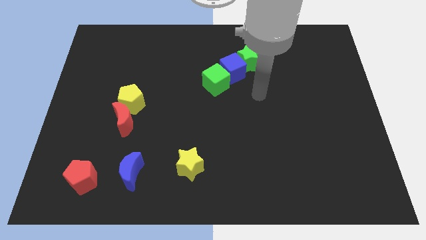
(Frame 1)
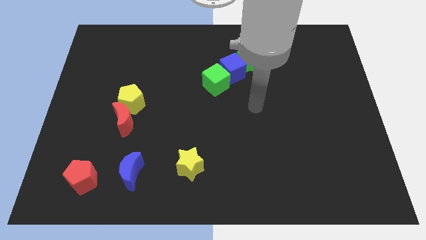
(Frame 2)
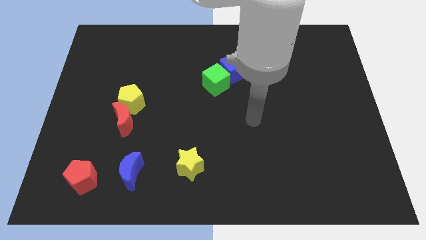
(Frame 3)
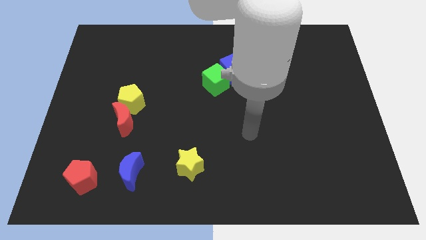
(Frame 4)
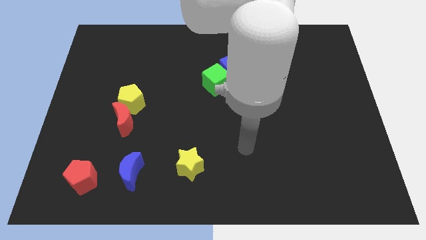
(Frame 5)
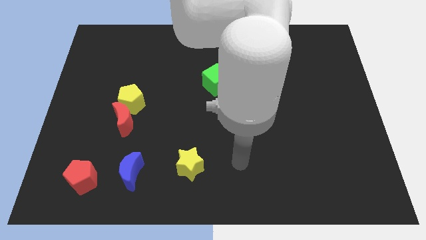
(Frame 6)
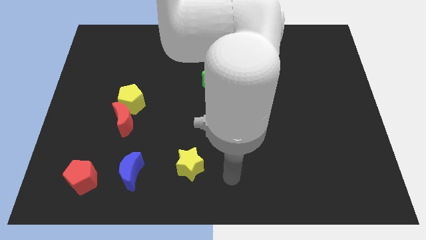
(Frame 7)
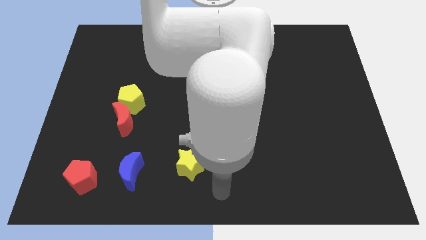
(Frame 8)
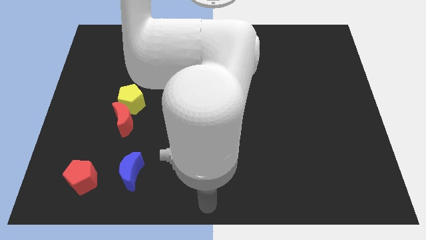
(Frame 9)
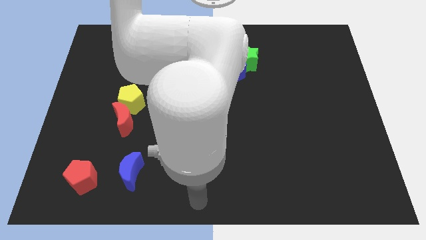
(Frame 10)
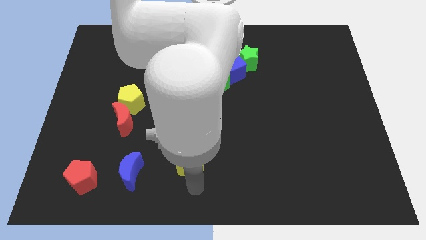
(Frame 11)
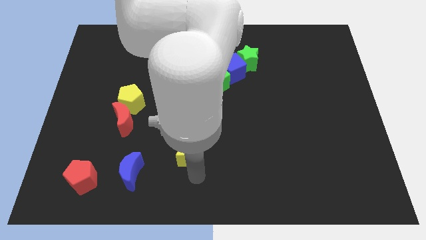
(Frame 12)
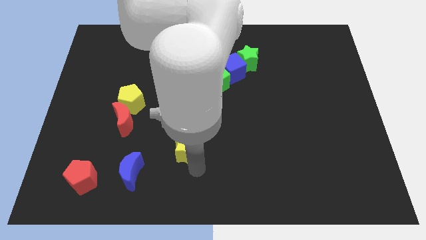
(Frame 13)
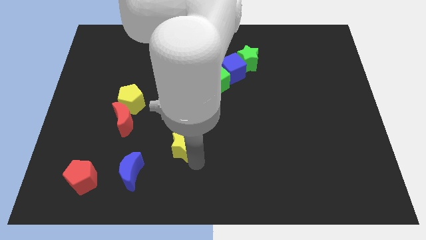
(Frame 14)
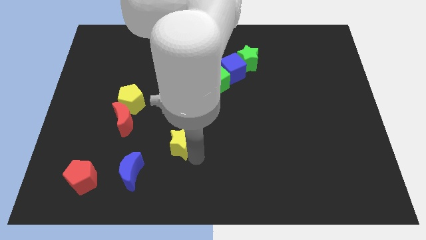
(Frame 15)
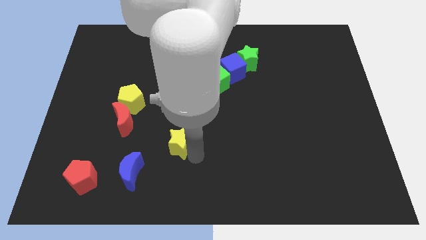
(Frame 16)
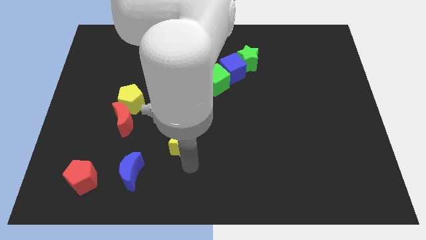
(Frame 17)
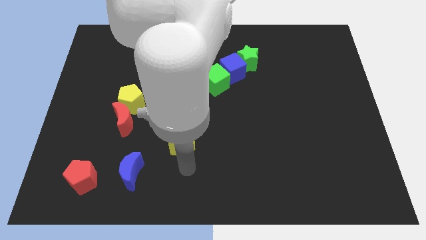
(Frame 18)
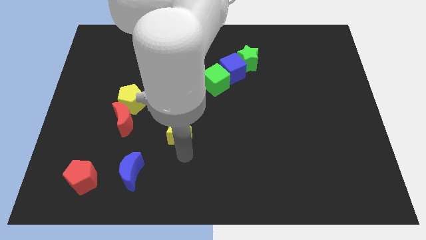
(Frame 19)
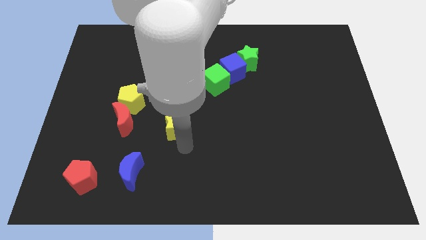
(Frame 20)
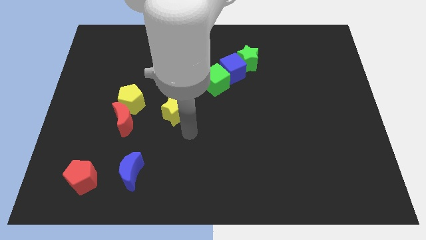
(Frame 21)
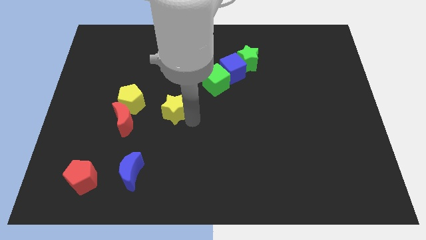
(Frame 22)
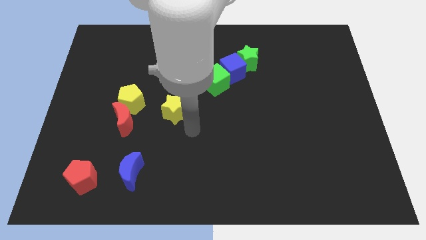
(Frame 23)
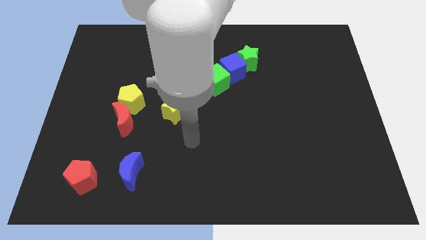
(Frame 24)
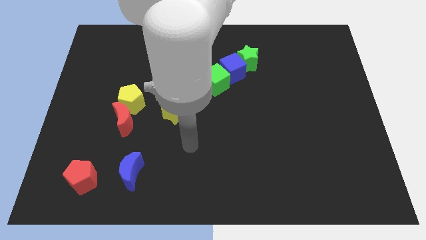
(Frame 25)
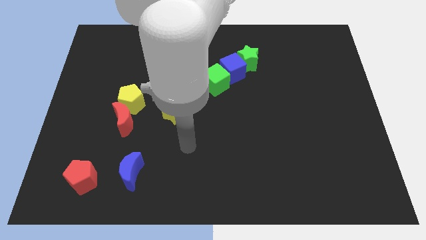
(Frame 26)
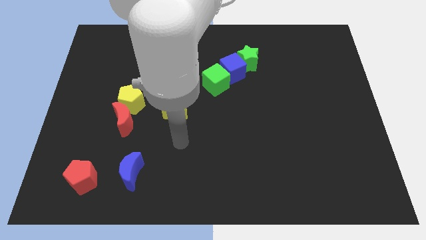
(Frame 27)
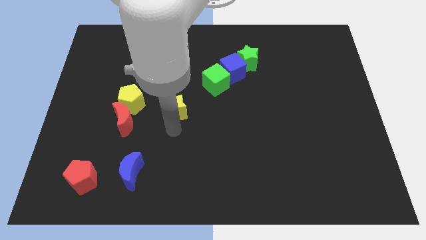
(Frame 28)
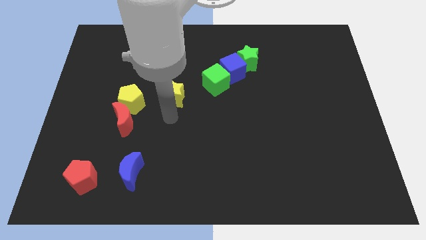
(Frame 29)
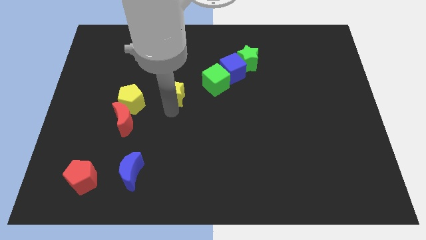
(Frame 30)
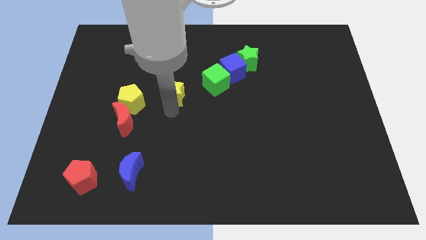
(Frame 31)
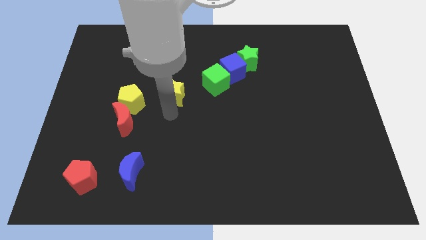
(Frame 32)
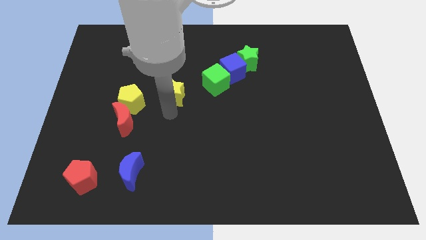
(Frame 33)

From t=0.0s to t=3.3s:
move the yellow star diagonally to the left of the green cube

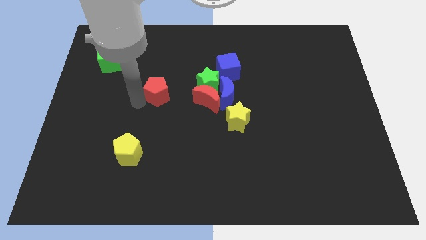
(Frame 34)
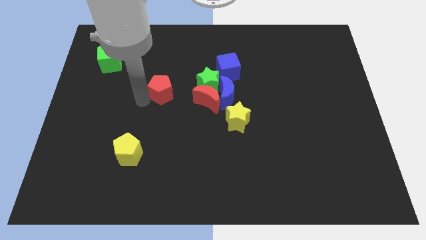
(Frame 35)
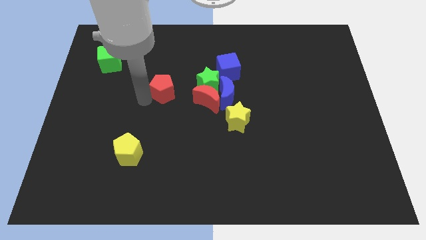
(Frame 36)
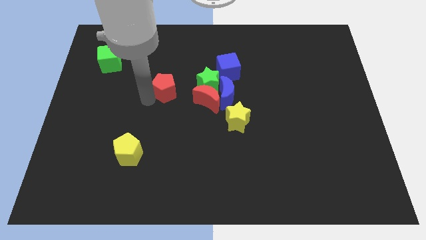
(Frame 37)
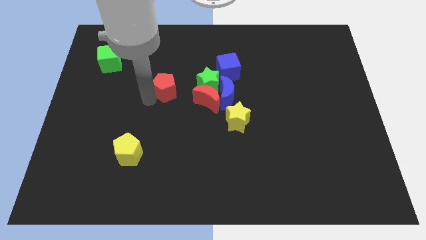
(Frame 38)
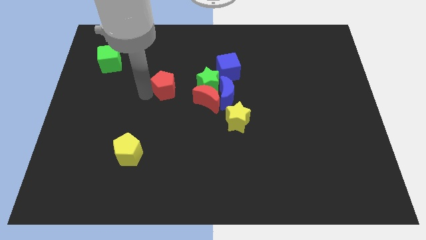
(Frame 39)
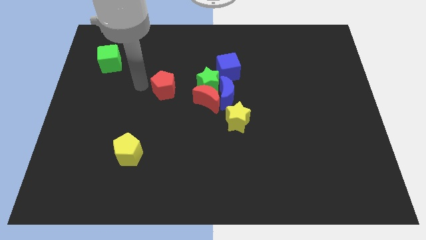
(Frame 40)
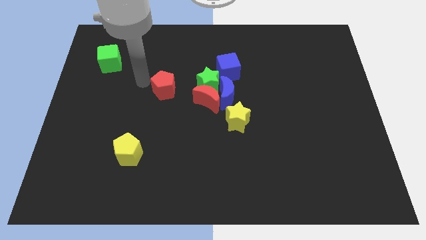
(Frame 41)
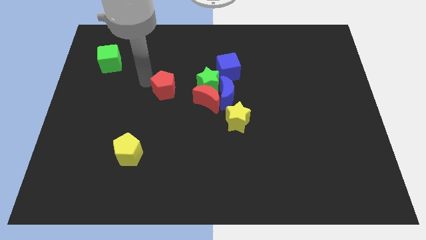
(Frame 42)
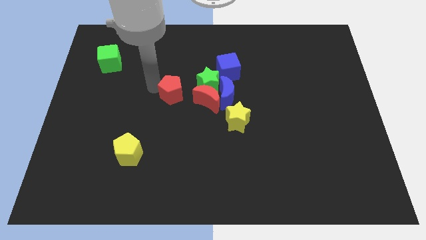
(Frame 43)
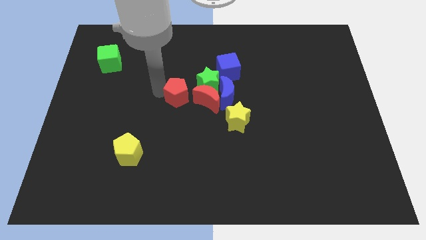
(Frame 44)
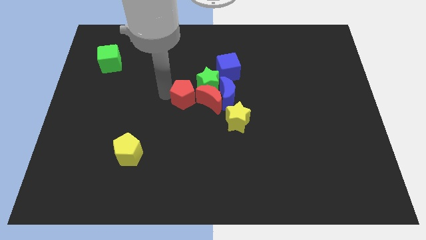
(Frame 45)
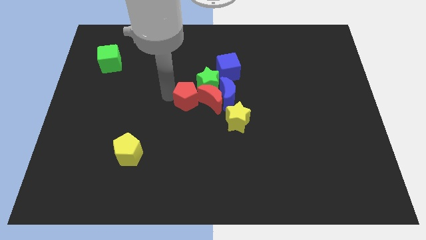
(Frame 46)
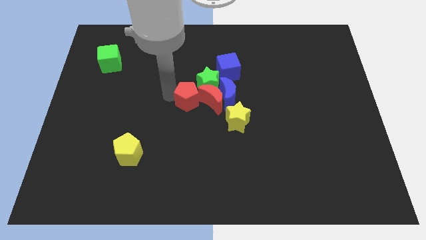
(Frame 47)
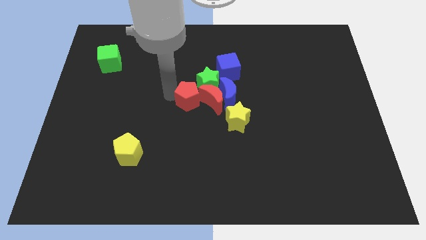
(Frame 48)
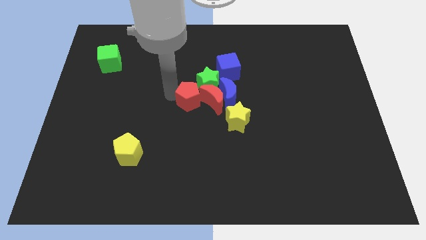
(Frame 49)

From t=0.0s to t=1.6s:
move the red pentagon to the left of the red crescent

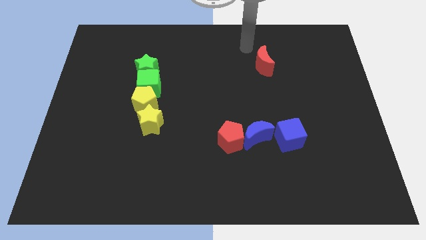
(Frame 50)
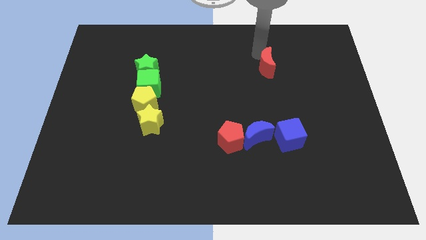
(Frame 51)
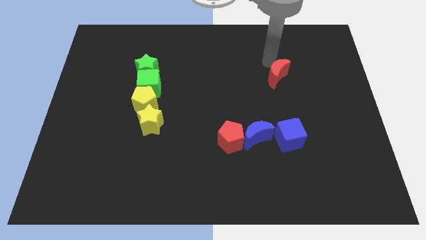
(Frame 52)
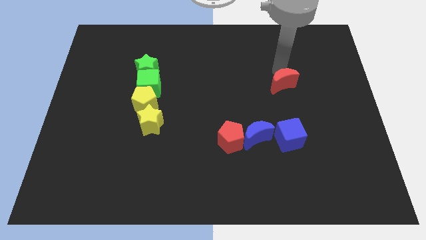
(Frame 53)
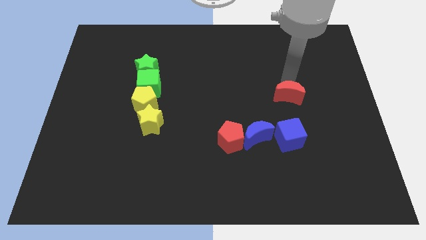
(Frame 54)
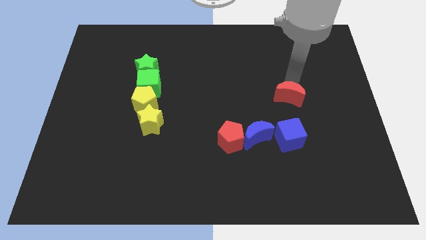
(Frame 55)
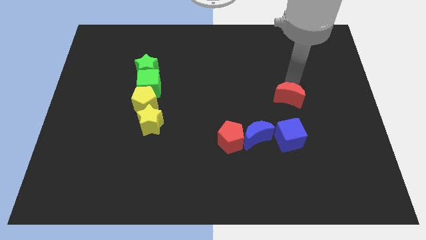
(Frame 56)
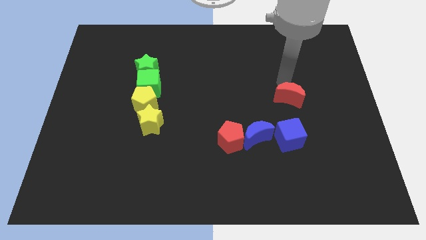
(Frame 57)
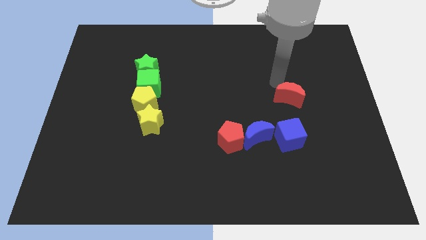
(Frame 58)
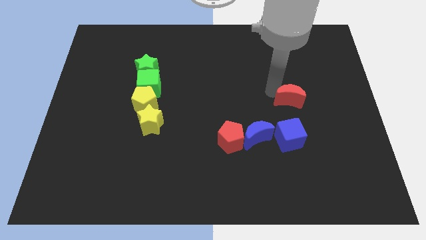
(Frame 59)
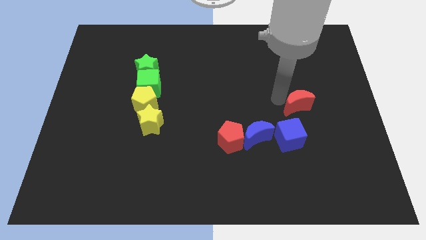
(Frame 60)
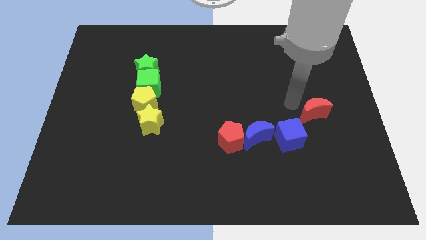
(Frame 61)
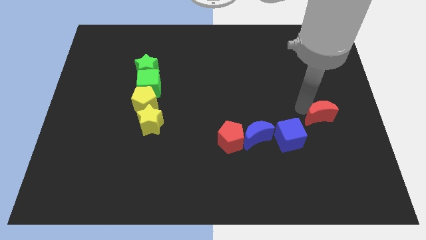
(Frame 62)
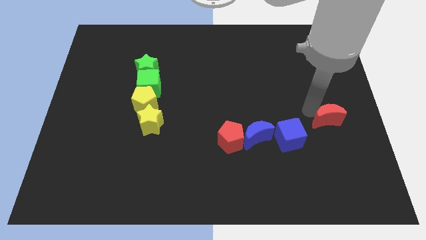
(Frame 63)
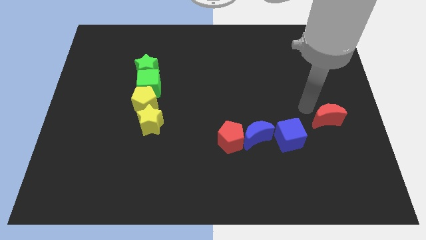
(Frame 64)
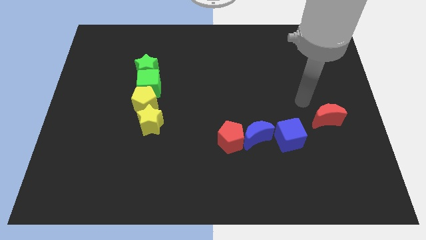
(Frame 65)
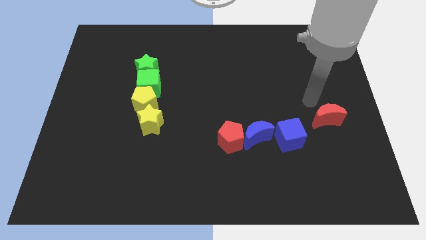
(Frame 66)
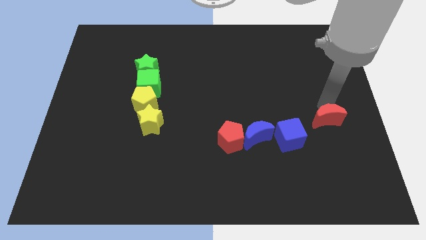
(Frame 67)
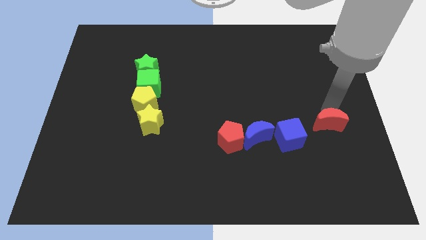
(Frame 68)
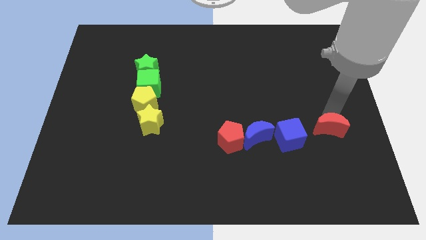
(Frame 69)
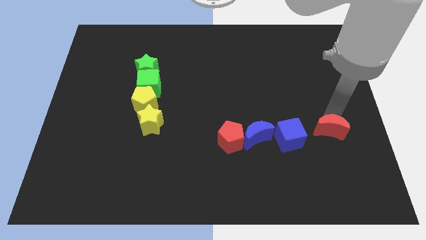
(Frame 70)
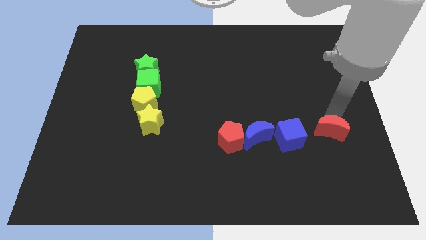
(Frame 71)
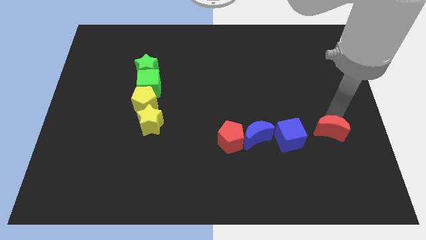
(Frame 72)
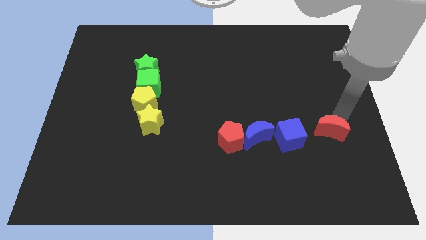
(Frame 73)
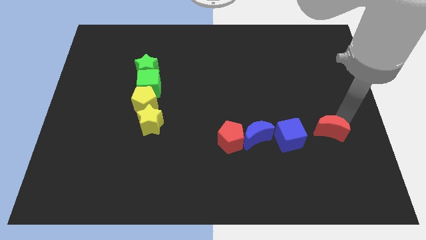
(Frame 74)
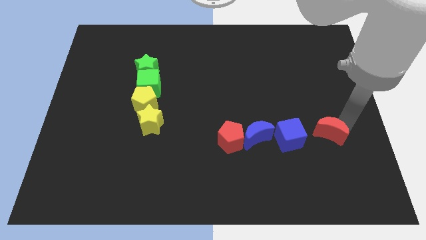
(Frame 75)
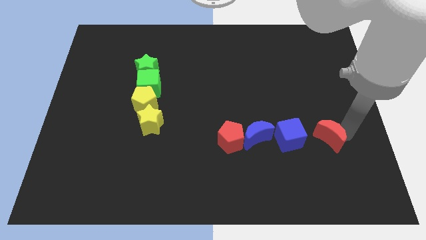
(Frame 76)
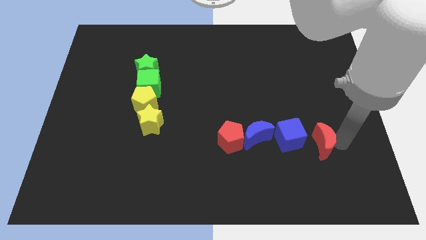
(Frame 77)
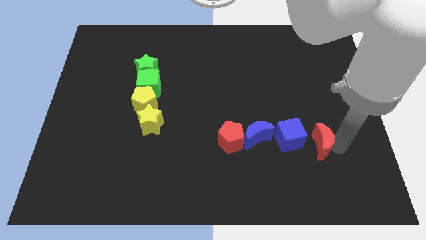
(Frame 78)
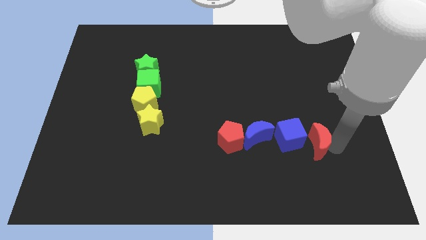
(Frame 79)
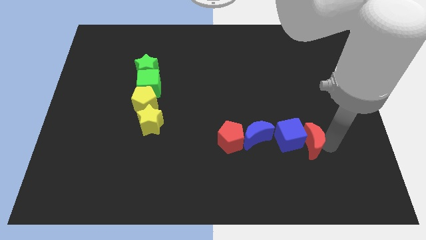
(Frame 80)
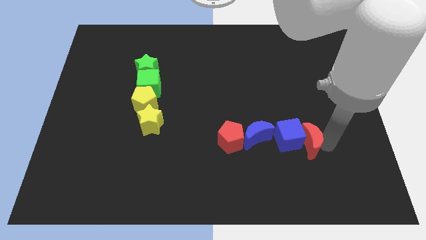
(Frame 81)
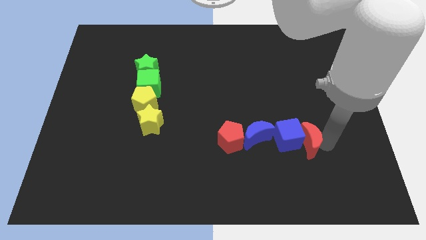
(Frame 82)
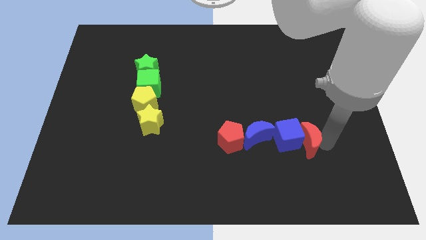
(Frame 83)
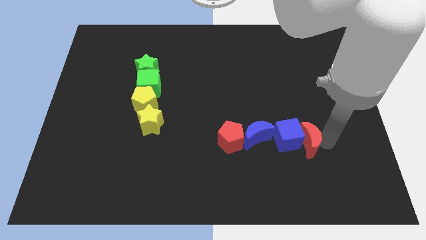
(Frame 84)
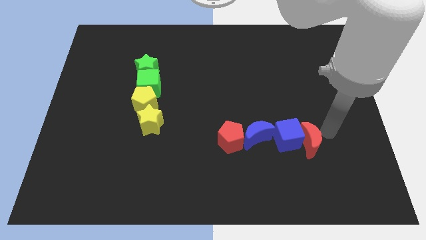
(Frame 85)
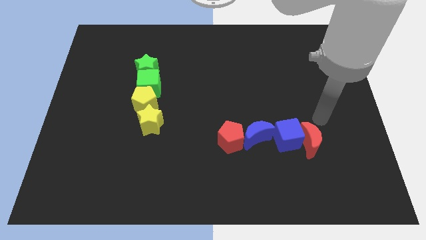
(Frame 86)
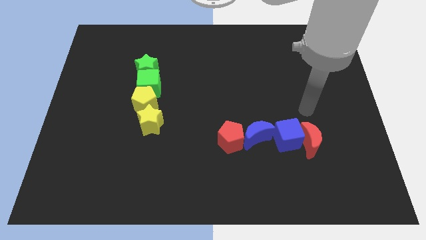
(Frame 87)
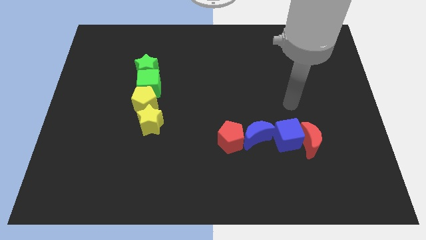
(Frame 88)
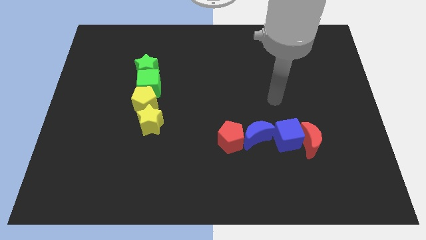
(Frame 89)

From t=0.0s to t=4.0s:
push the red moon to the right of the blue cube

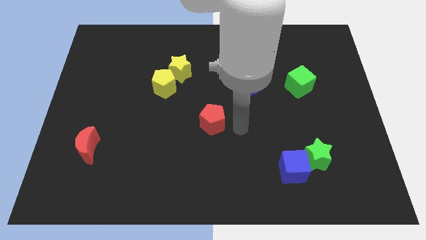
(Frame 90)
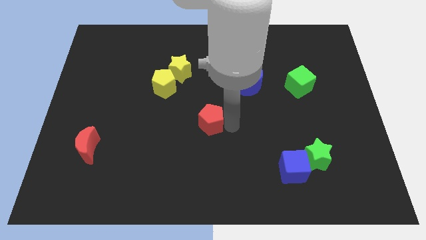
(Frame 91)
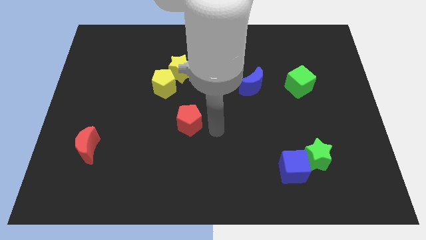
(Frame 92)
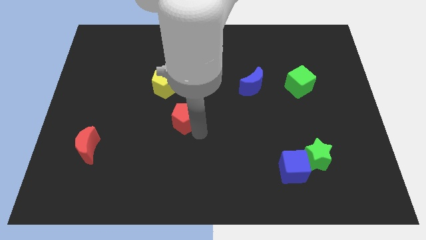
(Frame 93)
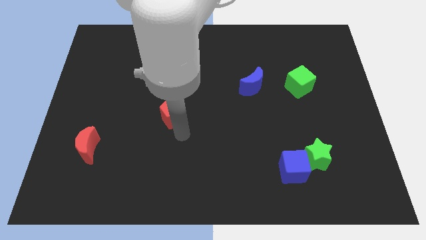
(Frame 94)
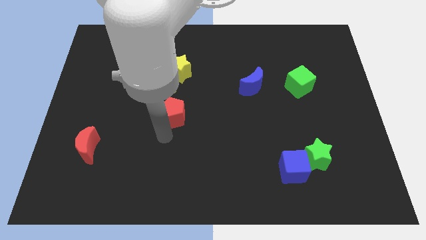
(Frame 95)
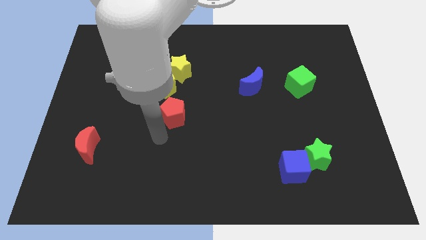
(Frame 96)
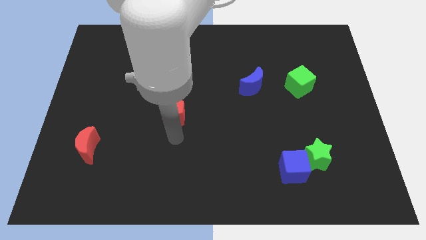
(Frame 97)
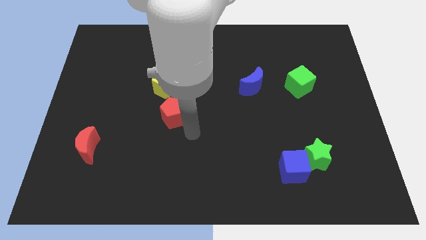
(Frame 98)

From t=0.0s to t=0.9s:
place red pentagon to the bottom of yellow pentagon
